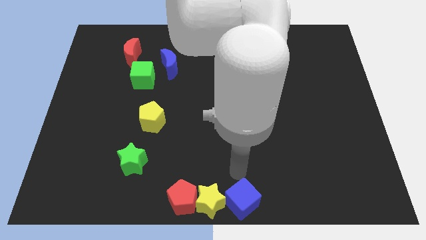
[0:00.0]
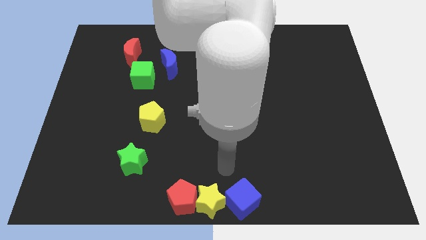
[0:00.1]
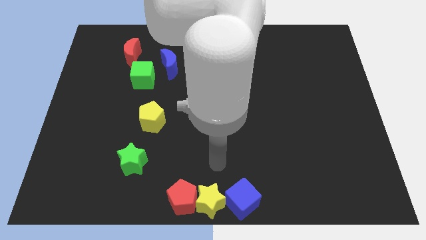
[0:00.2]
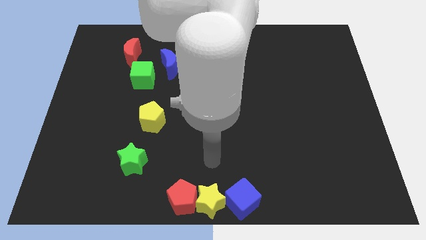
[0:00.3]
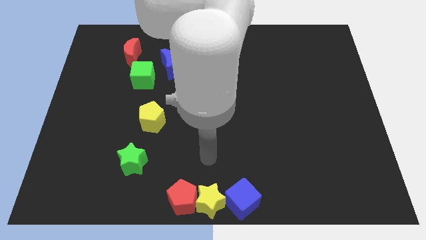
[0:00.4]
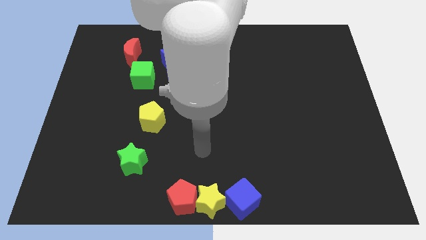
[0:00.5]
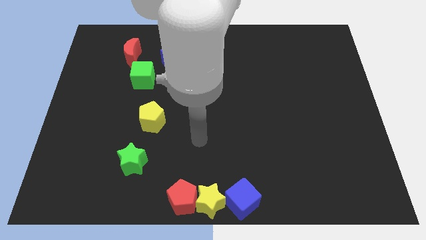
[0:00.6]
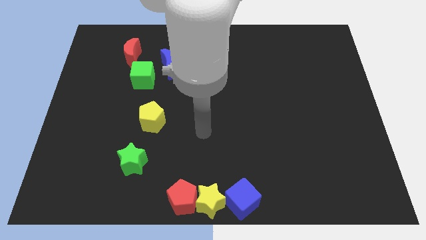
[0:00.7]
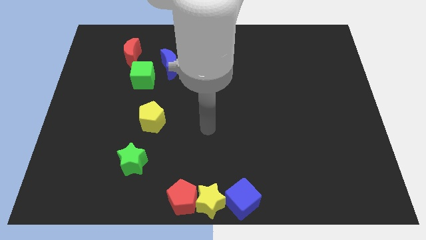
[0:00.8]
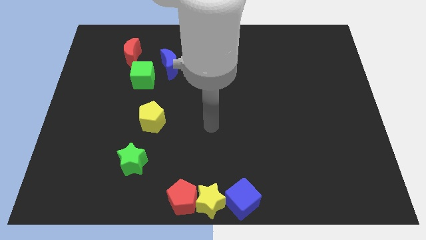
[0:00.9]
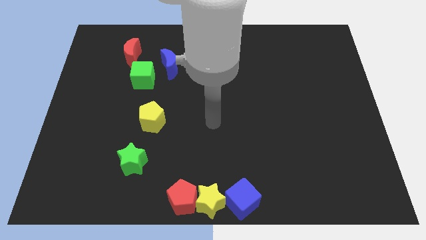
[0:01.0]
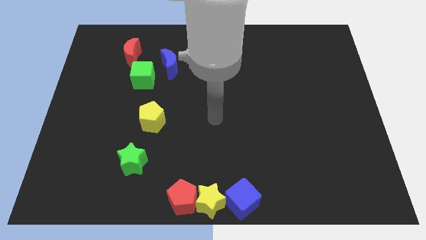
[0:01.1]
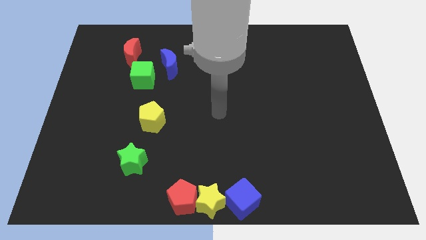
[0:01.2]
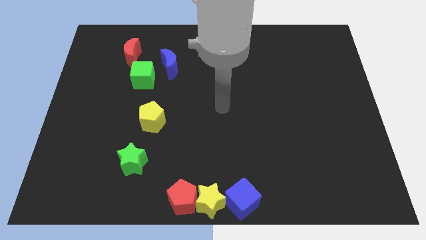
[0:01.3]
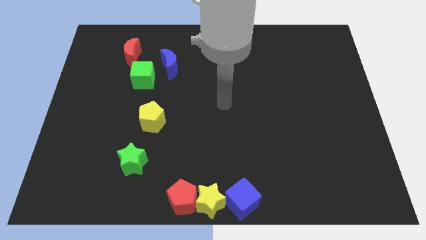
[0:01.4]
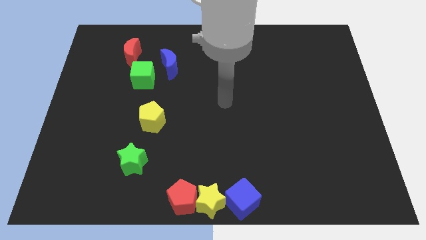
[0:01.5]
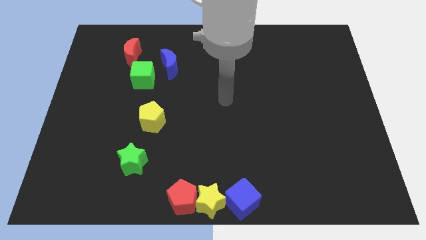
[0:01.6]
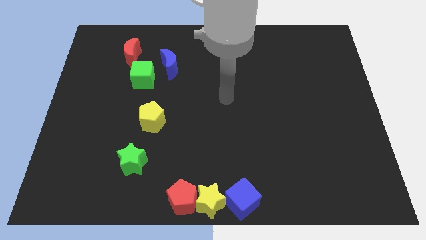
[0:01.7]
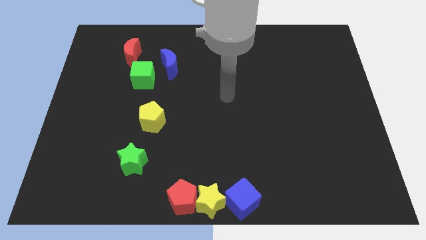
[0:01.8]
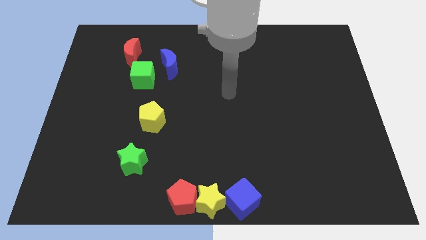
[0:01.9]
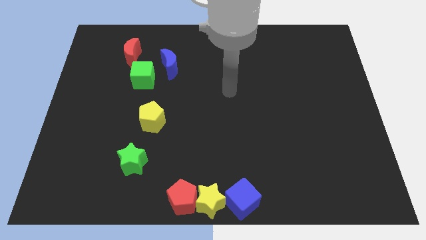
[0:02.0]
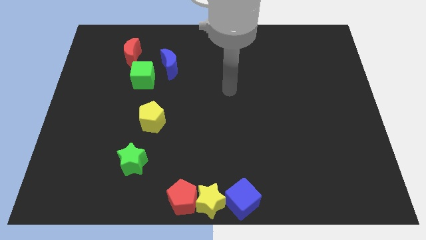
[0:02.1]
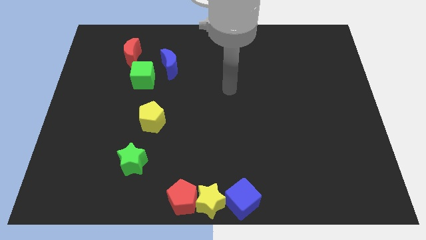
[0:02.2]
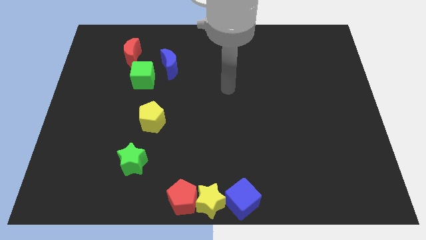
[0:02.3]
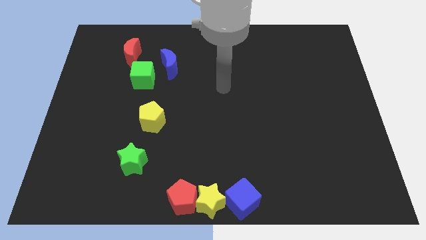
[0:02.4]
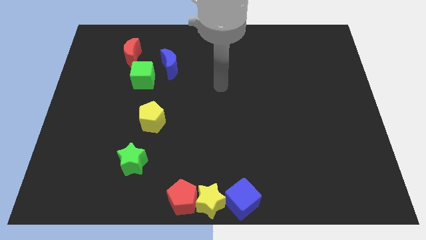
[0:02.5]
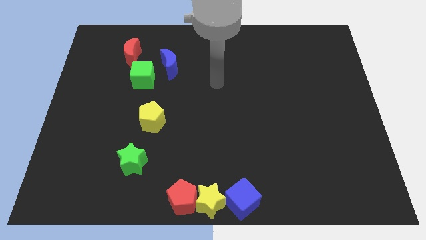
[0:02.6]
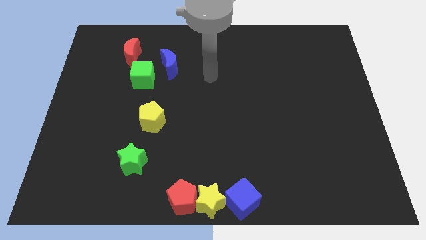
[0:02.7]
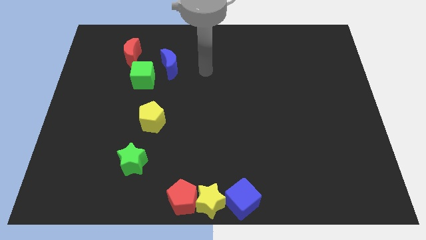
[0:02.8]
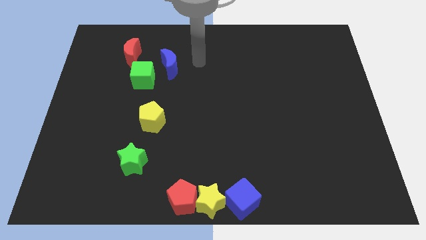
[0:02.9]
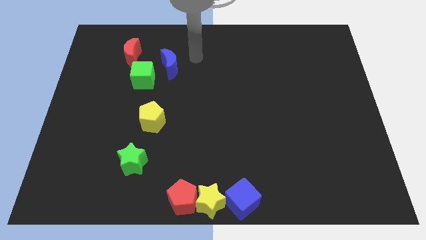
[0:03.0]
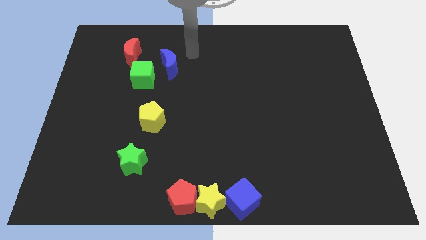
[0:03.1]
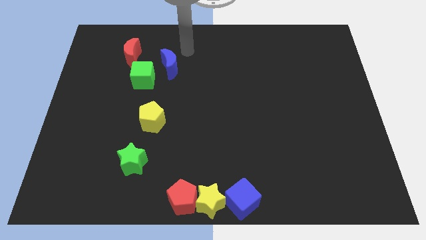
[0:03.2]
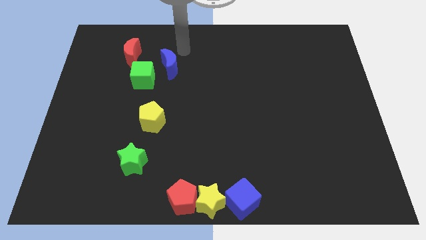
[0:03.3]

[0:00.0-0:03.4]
move the arm away from the blue cube

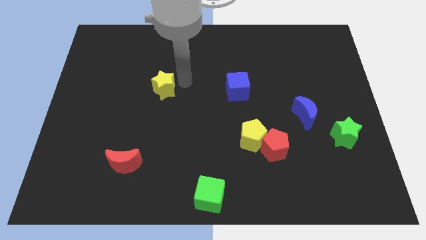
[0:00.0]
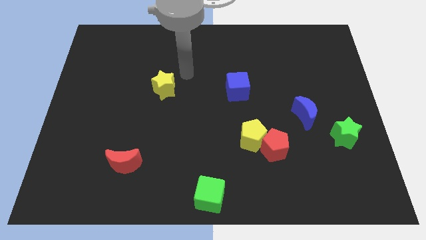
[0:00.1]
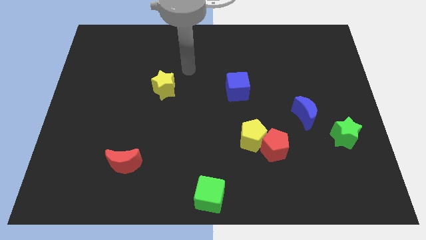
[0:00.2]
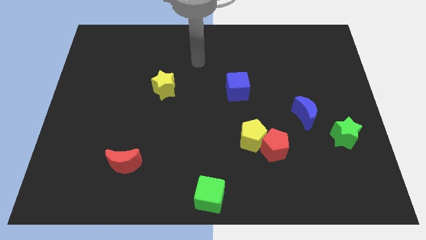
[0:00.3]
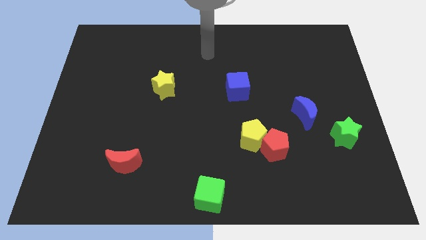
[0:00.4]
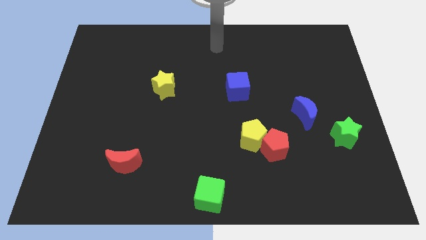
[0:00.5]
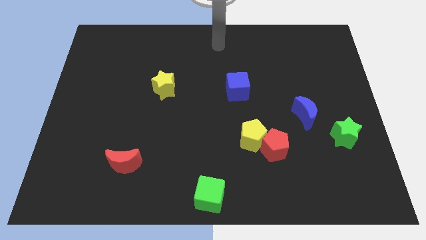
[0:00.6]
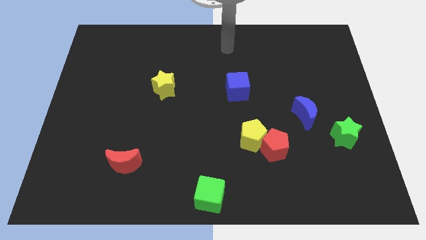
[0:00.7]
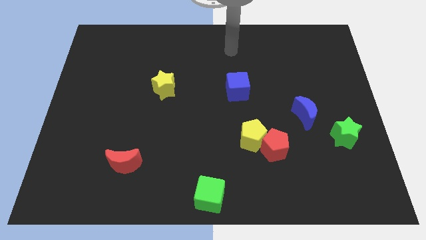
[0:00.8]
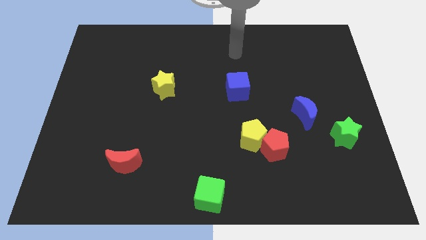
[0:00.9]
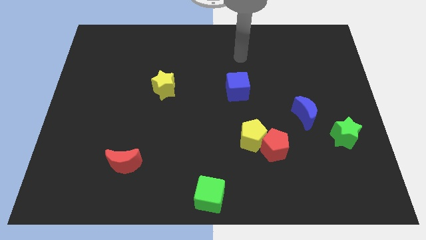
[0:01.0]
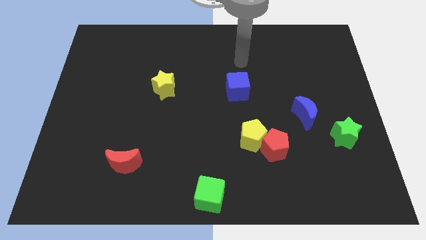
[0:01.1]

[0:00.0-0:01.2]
move your arm above the blue cube

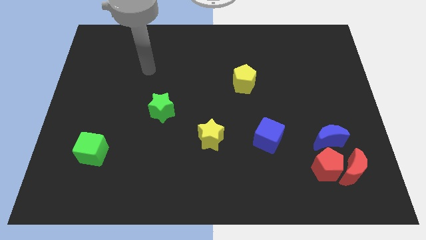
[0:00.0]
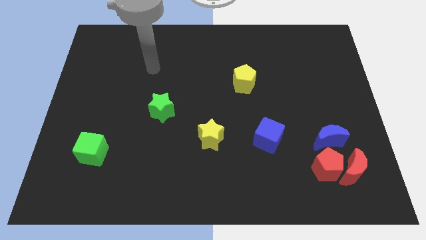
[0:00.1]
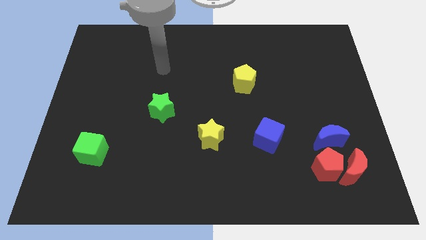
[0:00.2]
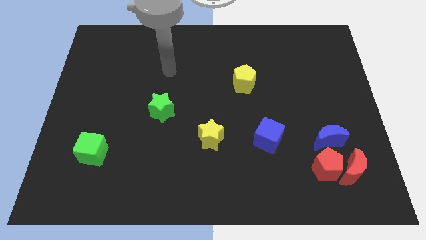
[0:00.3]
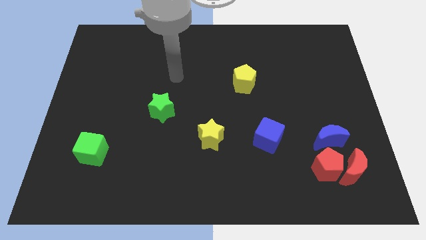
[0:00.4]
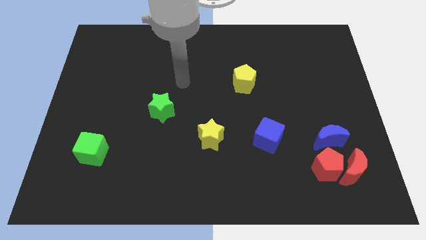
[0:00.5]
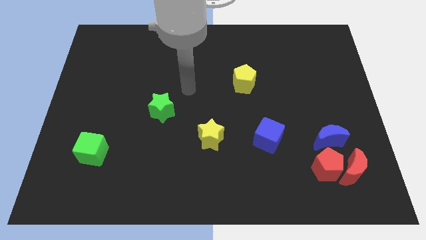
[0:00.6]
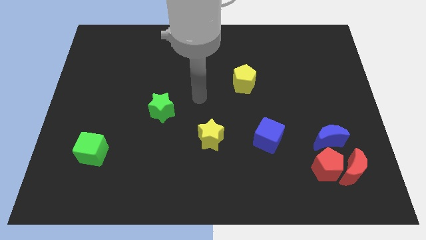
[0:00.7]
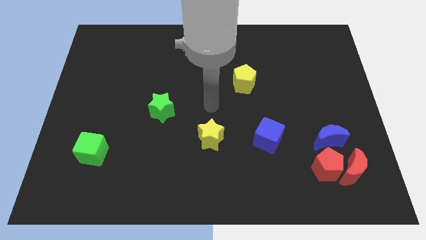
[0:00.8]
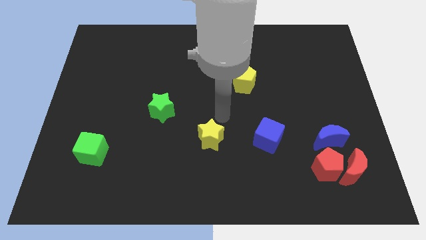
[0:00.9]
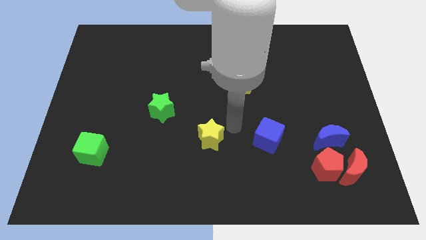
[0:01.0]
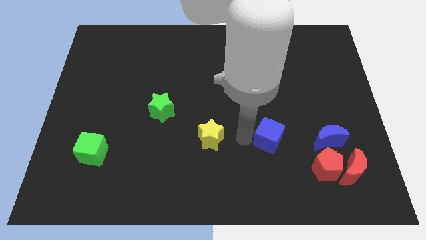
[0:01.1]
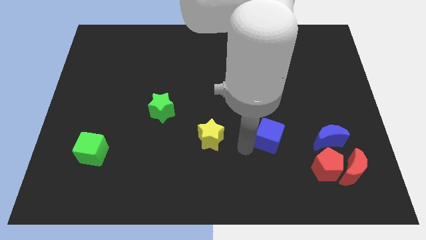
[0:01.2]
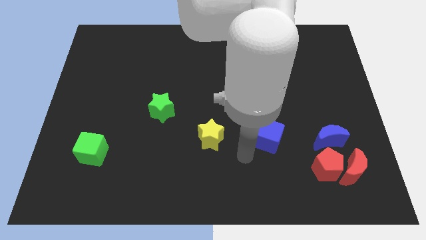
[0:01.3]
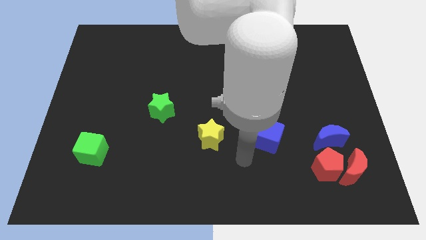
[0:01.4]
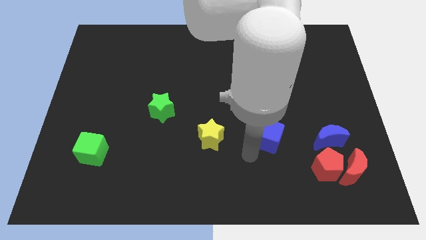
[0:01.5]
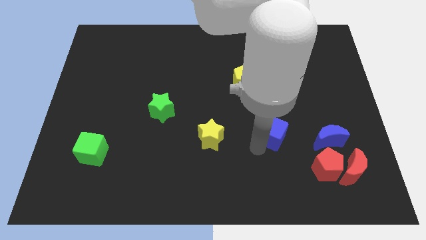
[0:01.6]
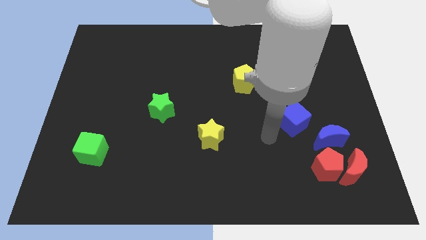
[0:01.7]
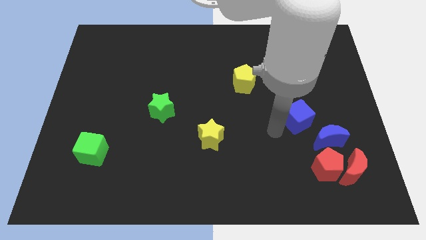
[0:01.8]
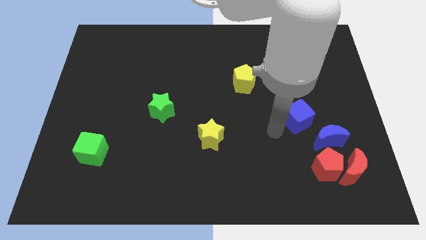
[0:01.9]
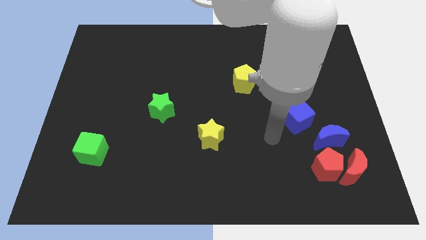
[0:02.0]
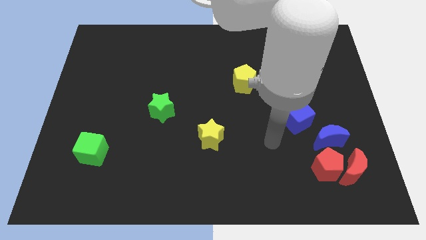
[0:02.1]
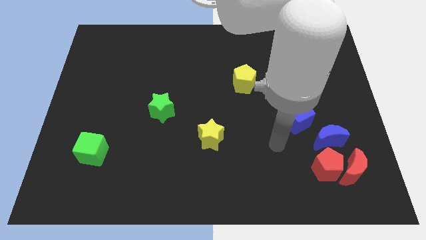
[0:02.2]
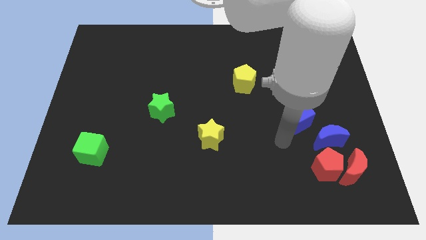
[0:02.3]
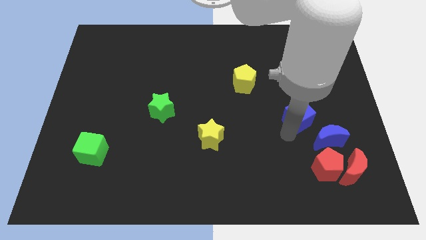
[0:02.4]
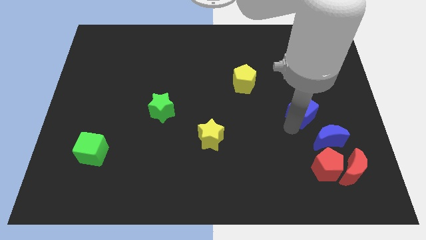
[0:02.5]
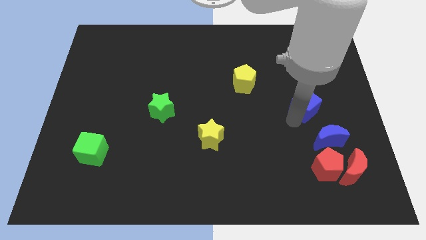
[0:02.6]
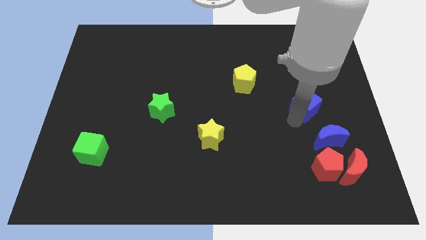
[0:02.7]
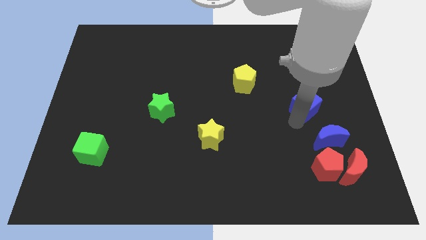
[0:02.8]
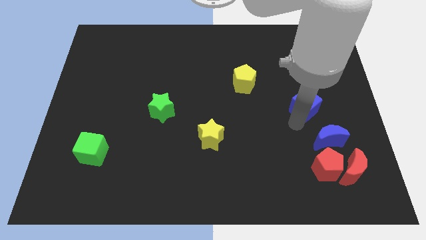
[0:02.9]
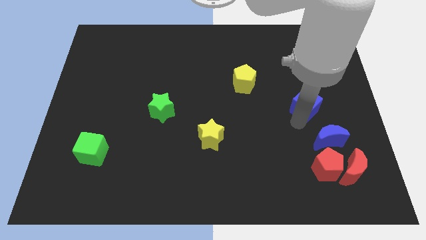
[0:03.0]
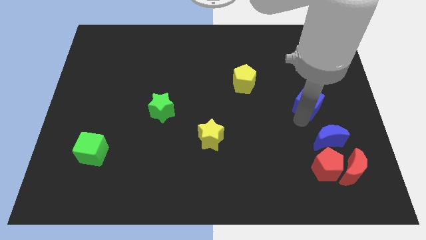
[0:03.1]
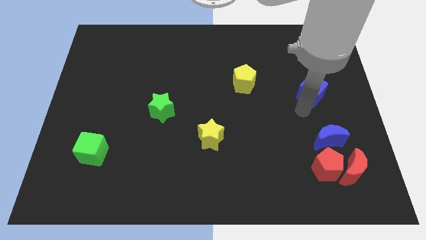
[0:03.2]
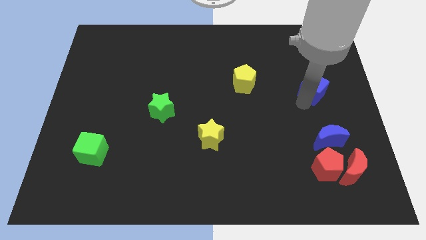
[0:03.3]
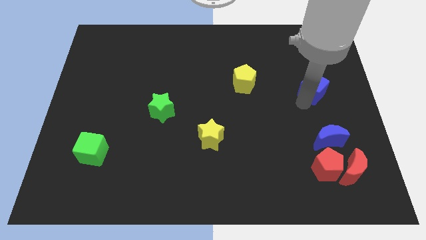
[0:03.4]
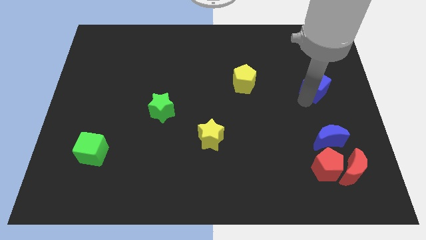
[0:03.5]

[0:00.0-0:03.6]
place the blue cube to the right of the yellow pentagon

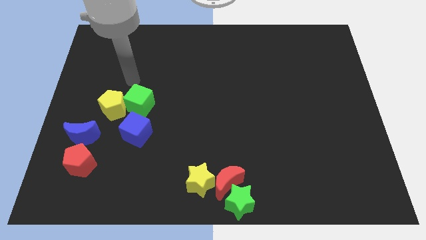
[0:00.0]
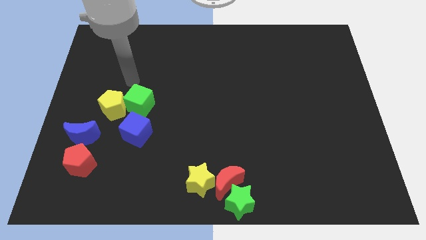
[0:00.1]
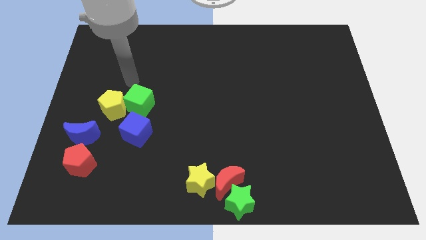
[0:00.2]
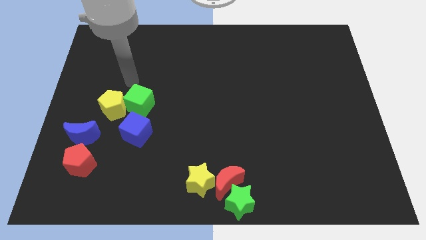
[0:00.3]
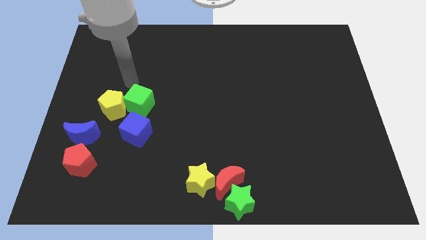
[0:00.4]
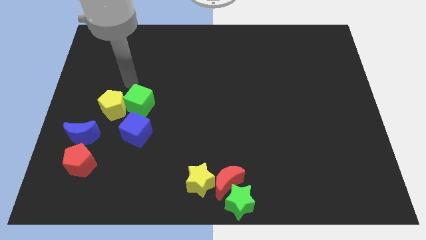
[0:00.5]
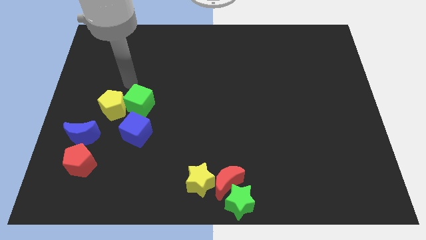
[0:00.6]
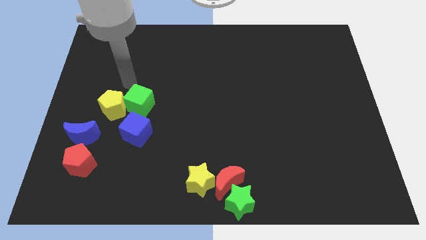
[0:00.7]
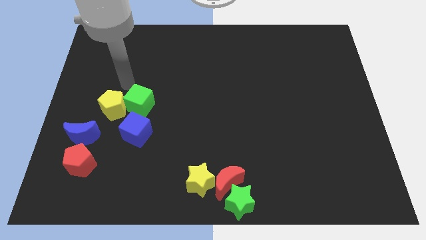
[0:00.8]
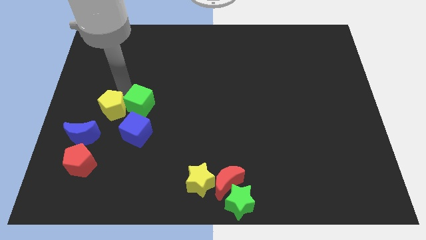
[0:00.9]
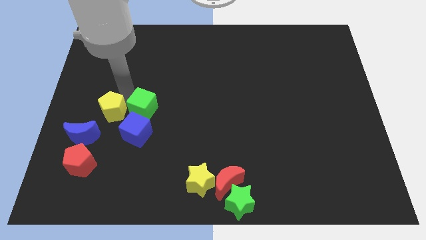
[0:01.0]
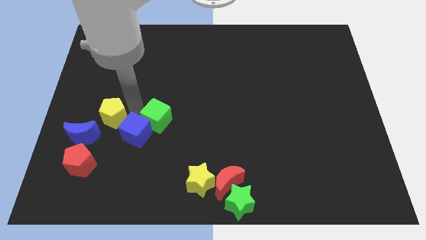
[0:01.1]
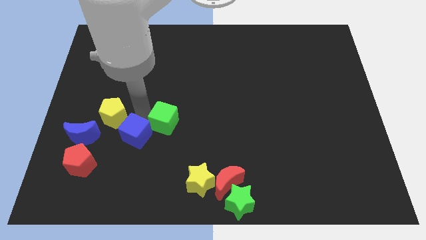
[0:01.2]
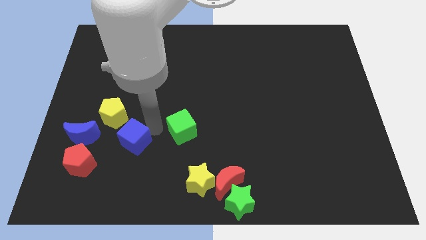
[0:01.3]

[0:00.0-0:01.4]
reposition green cube form the present place
